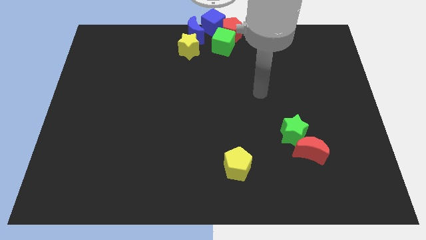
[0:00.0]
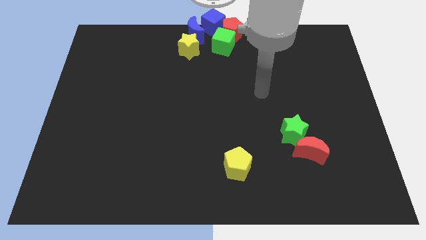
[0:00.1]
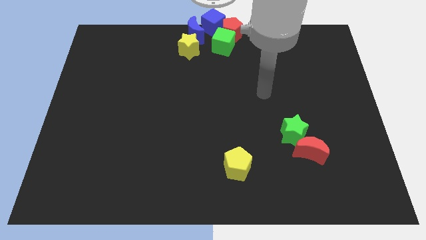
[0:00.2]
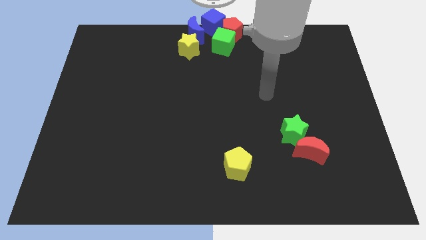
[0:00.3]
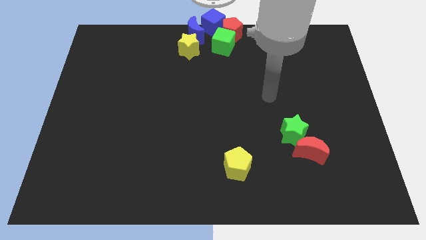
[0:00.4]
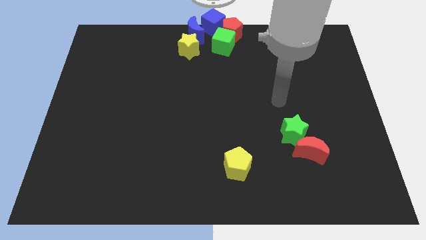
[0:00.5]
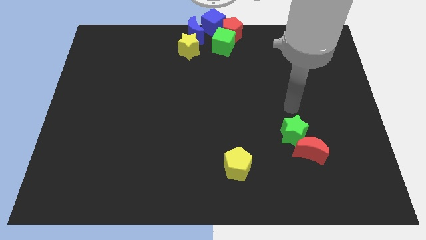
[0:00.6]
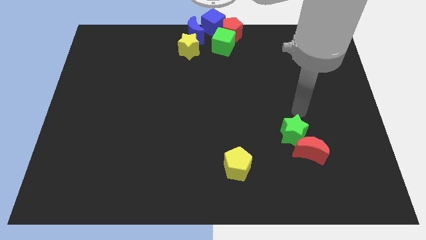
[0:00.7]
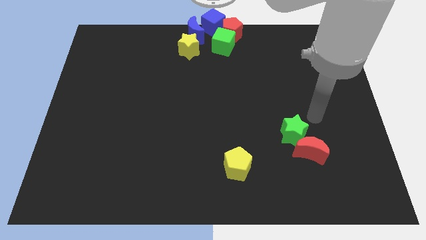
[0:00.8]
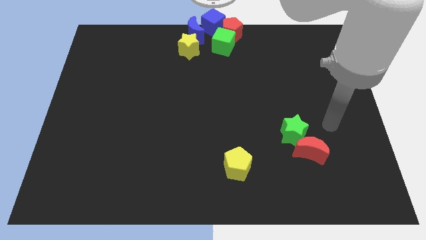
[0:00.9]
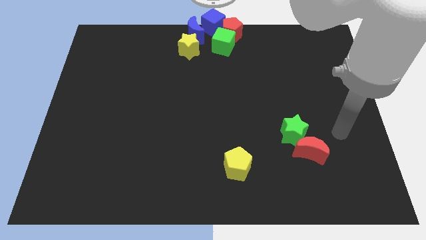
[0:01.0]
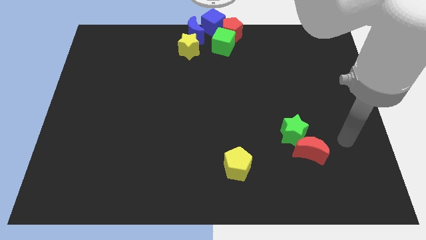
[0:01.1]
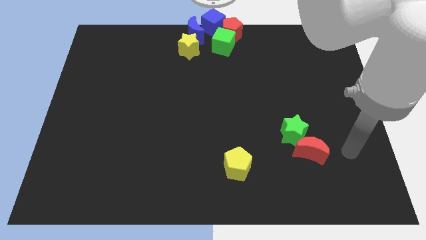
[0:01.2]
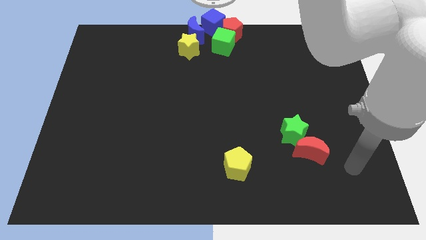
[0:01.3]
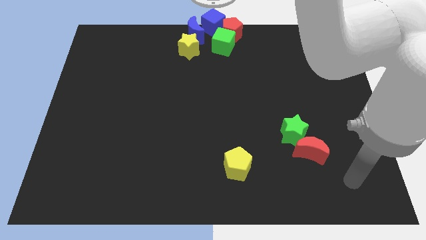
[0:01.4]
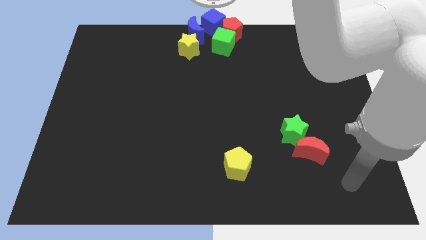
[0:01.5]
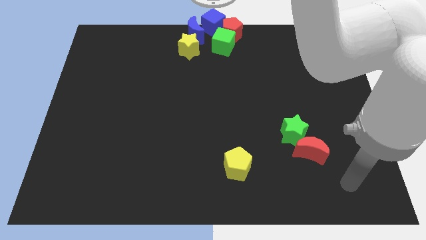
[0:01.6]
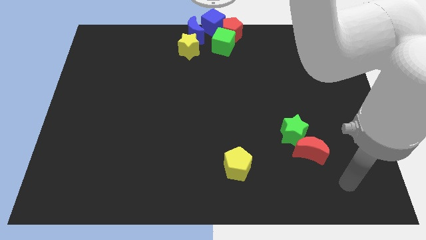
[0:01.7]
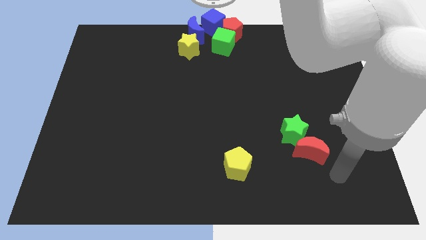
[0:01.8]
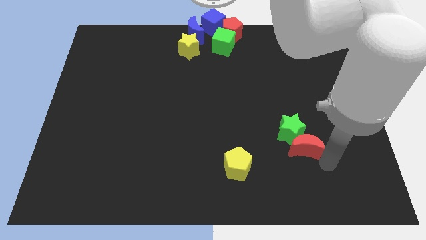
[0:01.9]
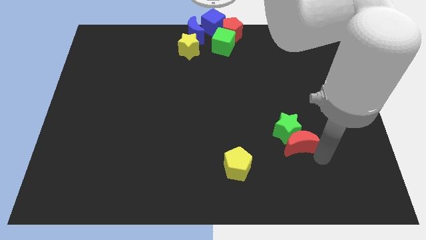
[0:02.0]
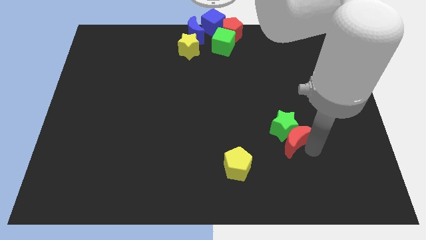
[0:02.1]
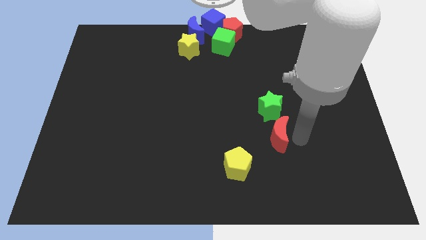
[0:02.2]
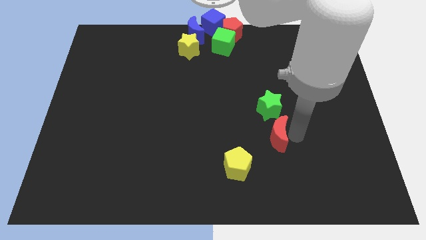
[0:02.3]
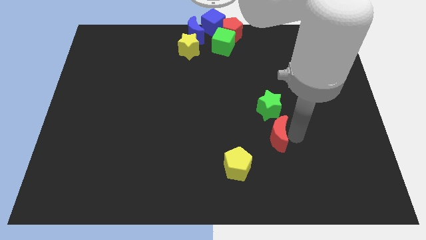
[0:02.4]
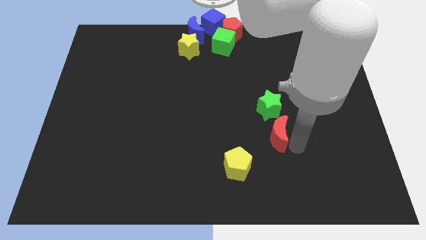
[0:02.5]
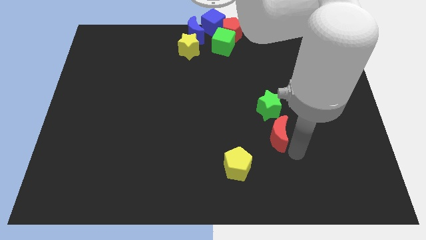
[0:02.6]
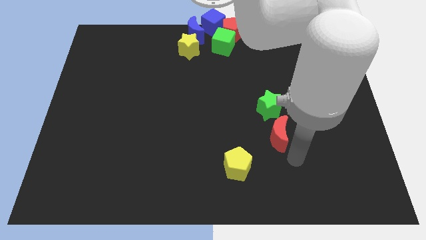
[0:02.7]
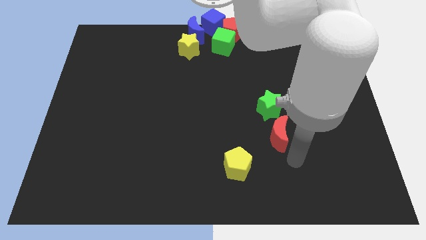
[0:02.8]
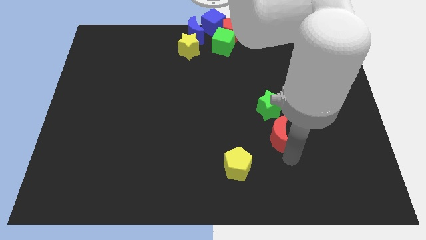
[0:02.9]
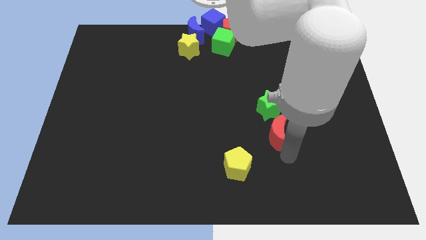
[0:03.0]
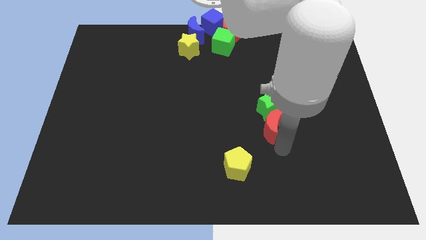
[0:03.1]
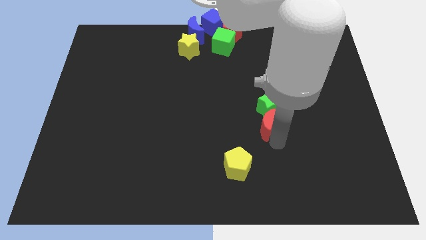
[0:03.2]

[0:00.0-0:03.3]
push the green star and the red moon to the top side of the board

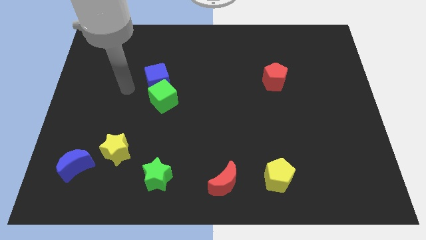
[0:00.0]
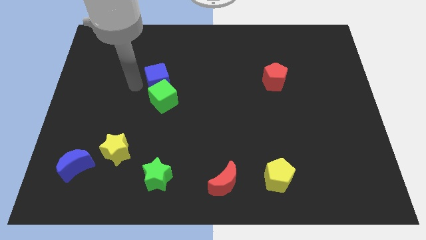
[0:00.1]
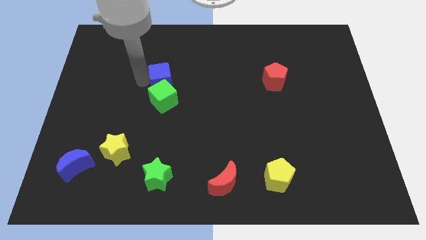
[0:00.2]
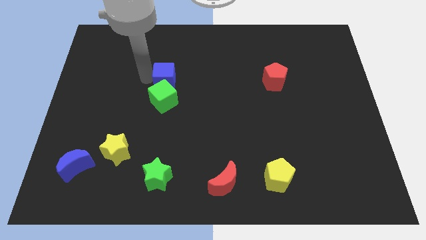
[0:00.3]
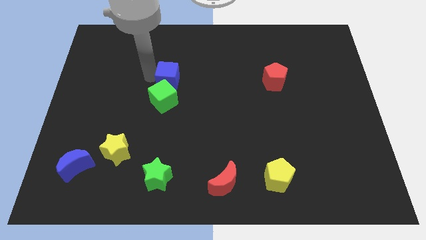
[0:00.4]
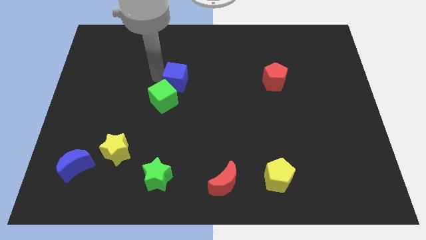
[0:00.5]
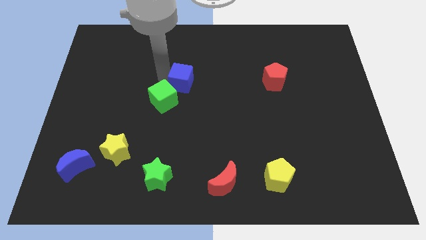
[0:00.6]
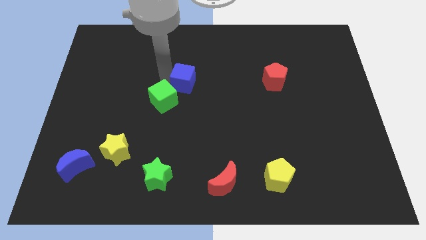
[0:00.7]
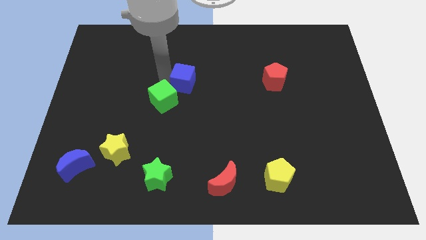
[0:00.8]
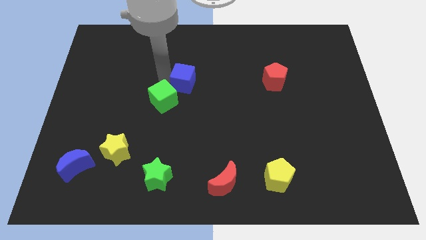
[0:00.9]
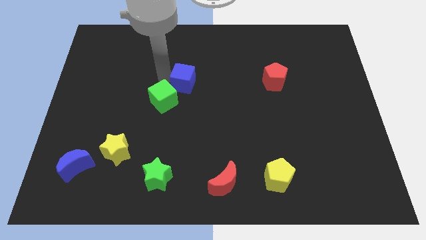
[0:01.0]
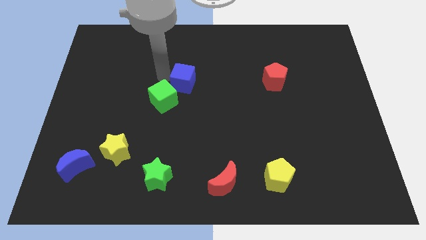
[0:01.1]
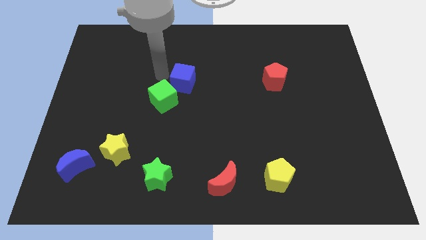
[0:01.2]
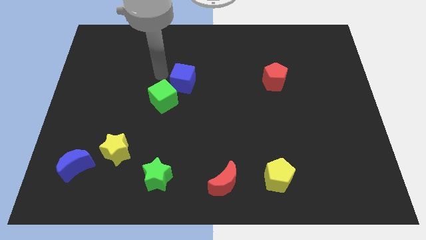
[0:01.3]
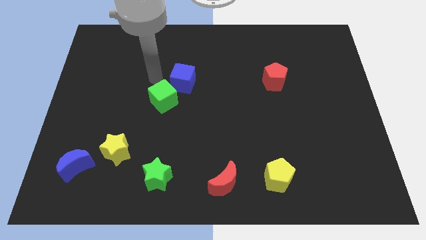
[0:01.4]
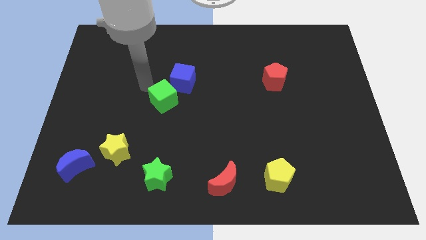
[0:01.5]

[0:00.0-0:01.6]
separate blue cube from the green cube

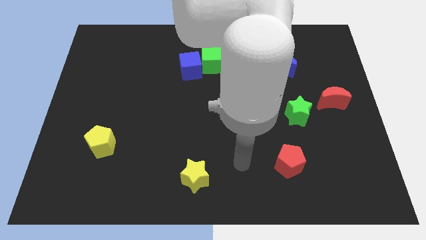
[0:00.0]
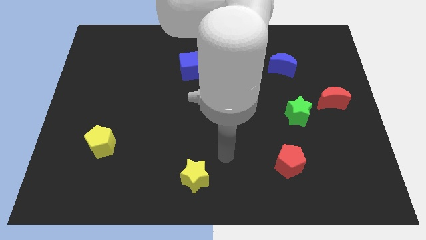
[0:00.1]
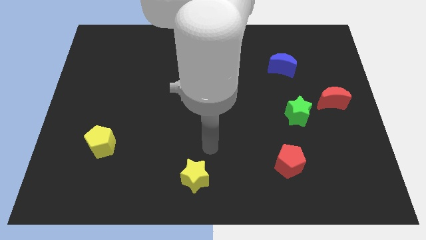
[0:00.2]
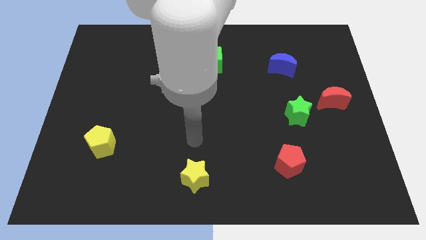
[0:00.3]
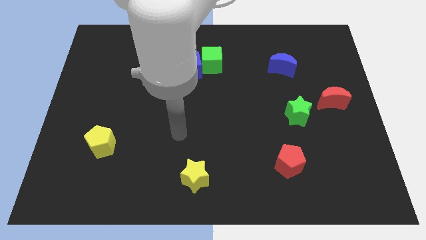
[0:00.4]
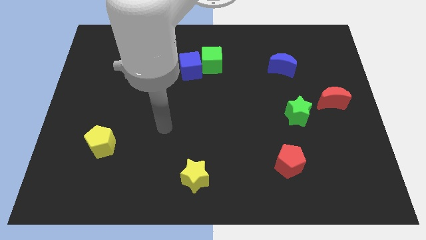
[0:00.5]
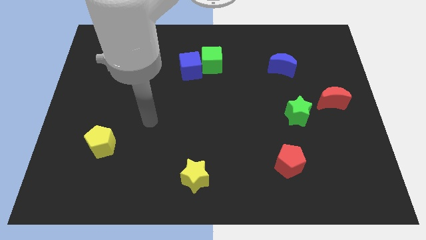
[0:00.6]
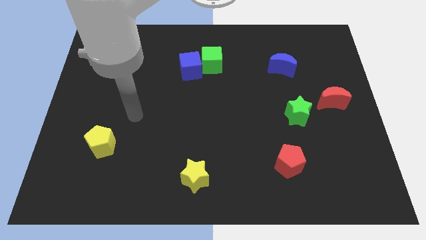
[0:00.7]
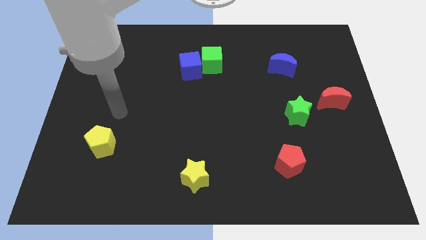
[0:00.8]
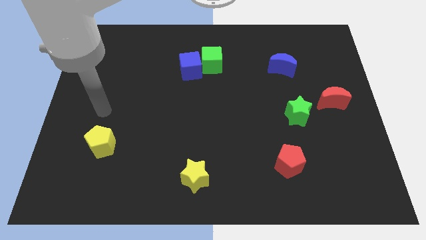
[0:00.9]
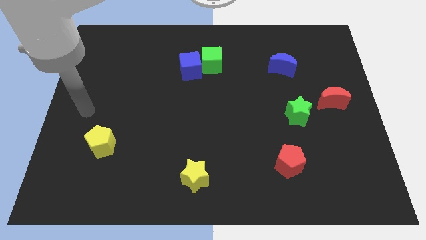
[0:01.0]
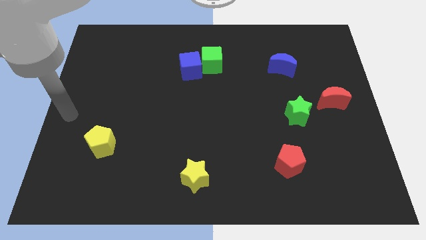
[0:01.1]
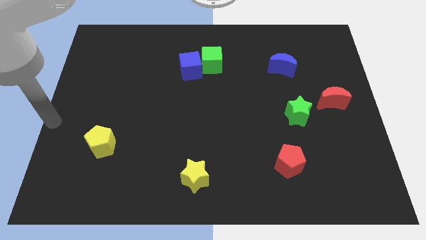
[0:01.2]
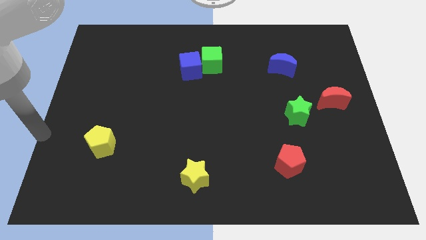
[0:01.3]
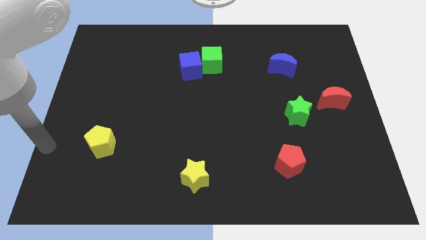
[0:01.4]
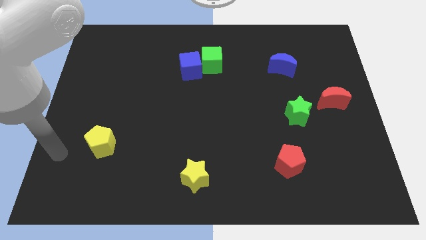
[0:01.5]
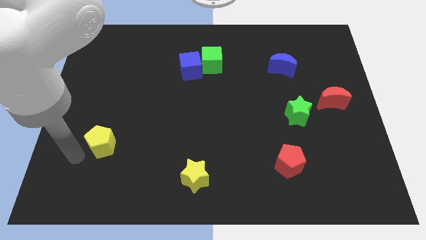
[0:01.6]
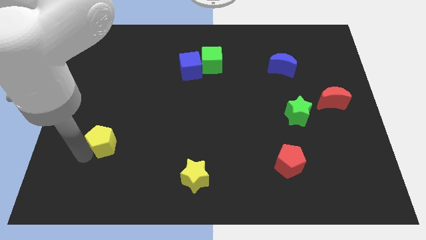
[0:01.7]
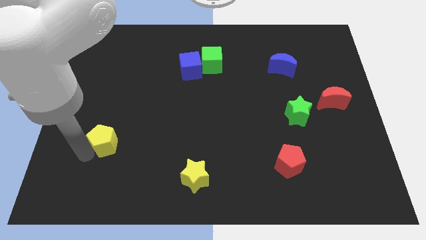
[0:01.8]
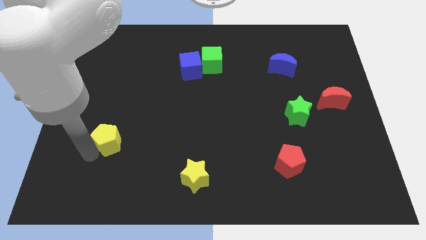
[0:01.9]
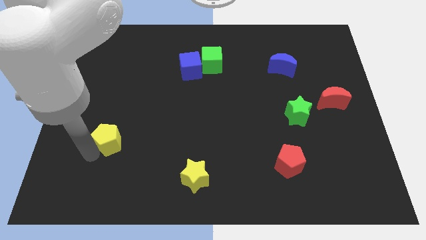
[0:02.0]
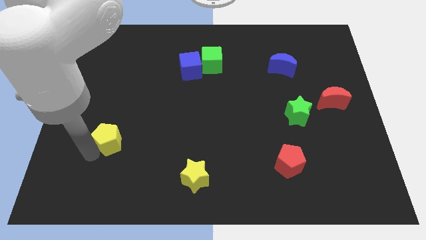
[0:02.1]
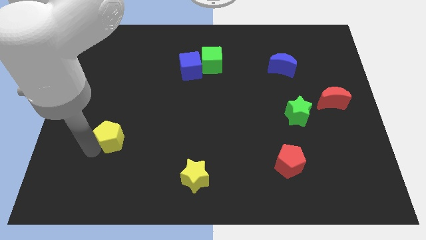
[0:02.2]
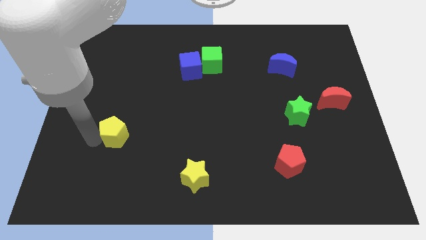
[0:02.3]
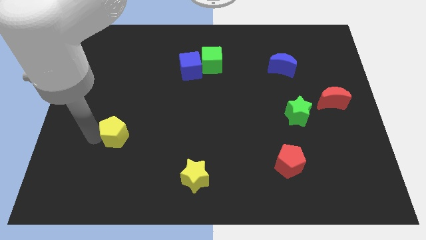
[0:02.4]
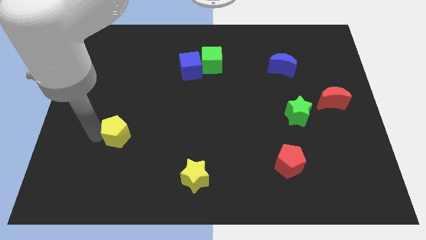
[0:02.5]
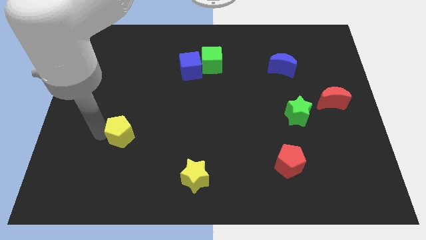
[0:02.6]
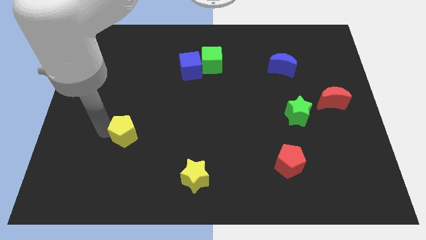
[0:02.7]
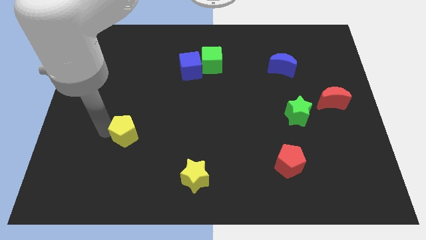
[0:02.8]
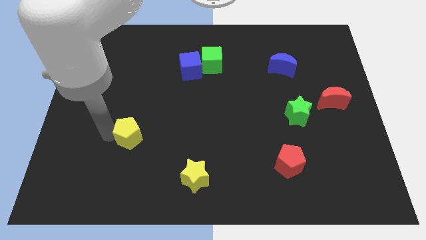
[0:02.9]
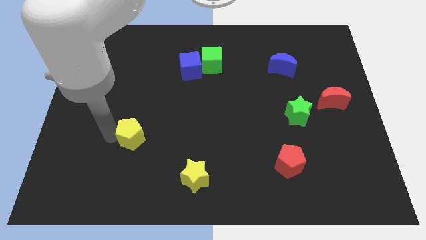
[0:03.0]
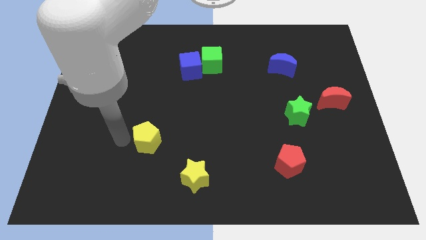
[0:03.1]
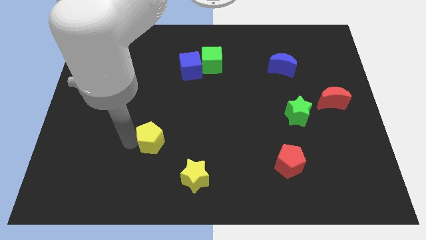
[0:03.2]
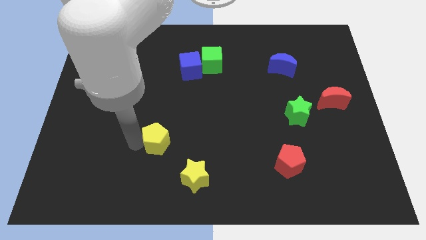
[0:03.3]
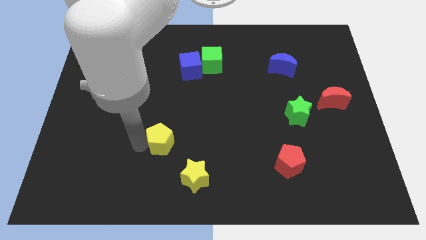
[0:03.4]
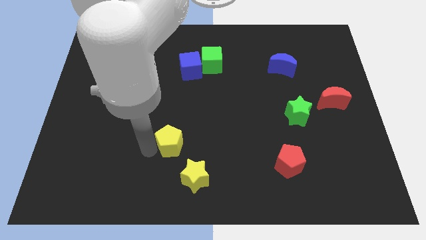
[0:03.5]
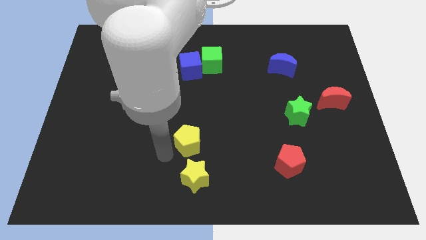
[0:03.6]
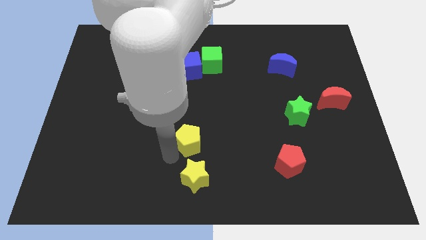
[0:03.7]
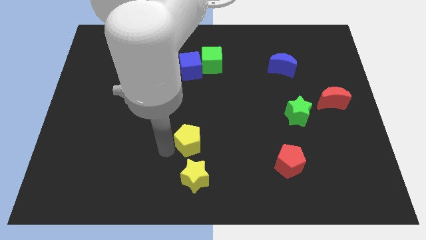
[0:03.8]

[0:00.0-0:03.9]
place the yellow pentagon at the top of yellow star

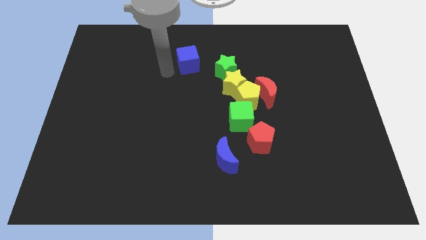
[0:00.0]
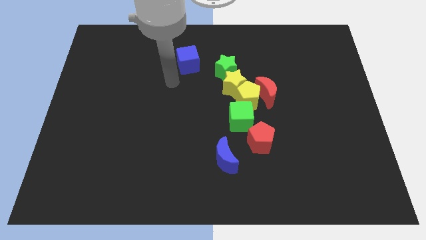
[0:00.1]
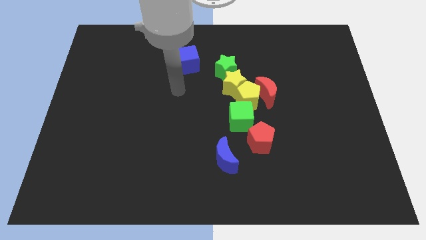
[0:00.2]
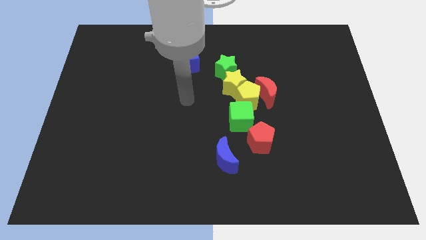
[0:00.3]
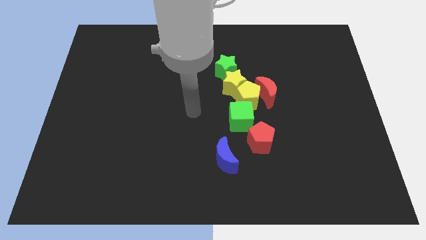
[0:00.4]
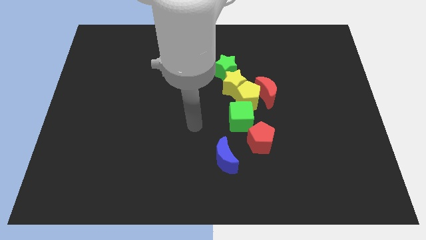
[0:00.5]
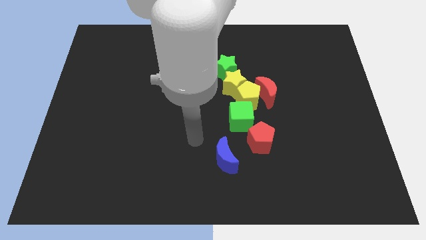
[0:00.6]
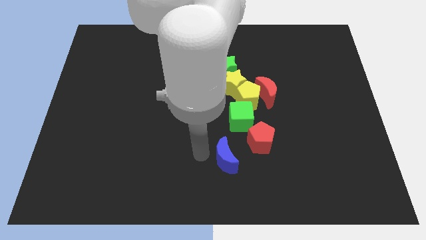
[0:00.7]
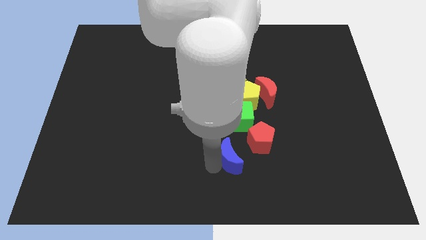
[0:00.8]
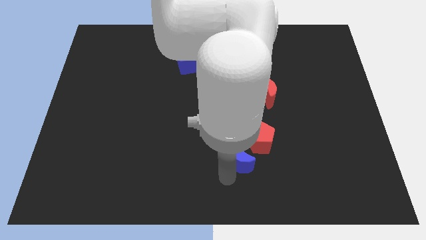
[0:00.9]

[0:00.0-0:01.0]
move the arm away from the blue cube
